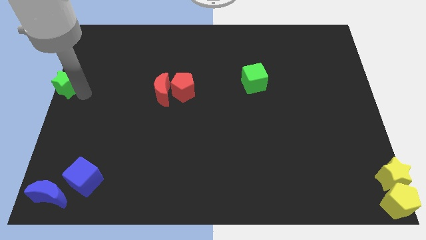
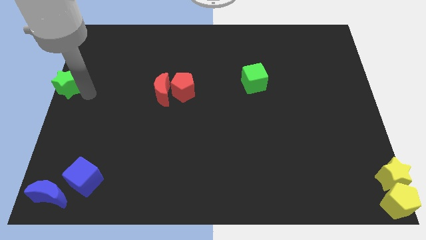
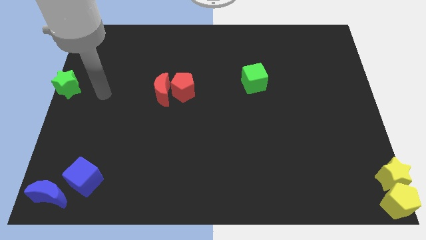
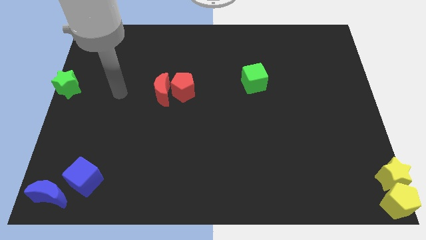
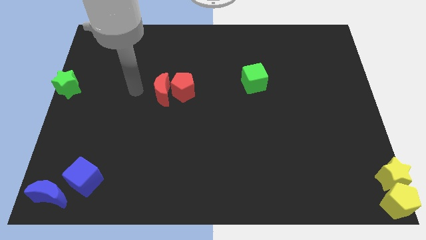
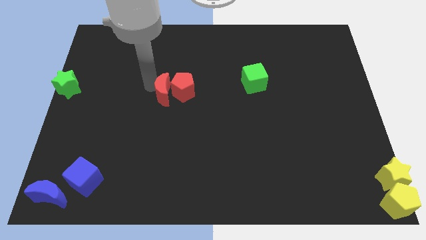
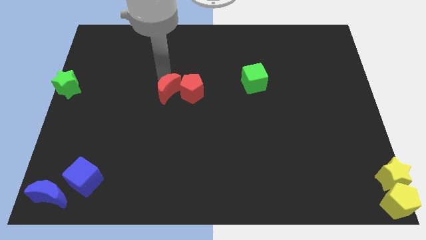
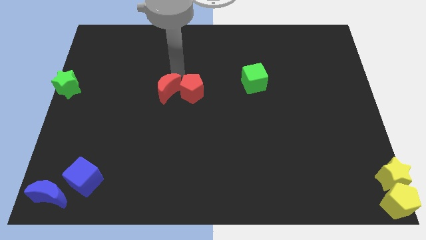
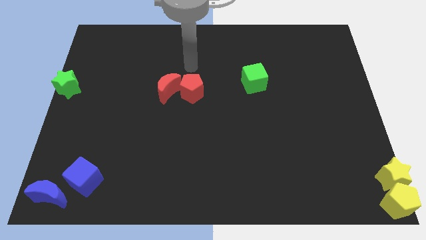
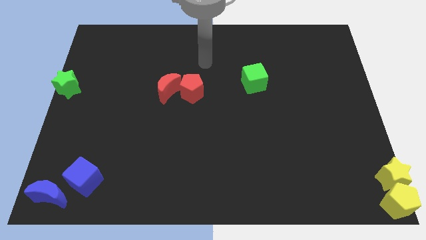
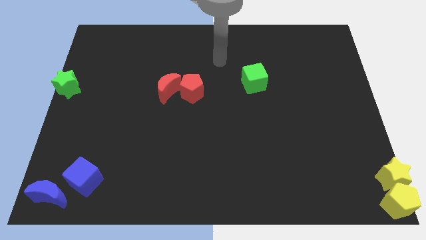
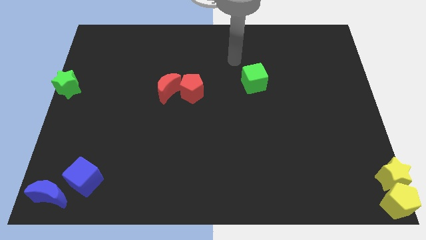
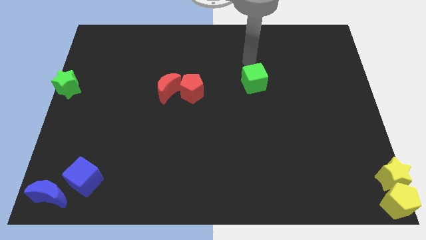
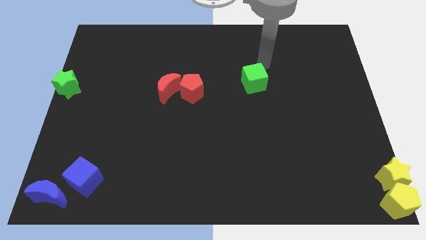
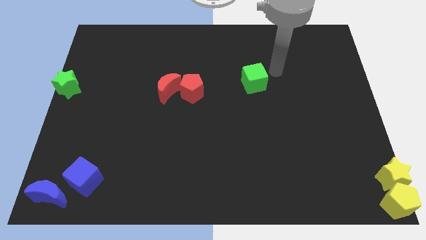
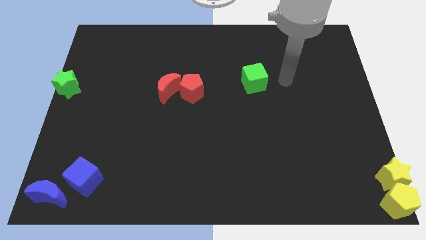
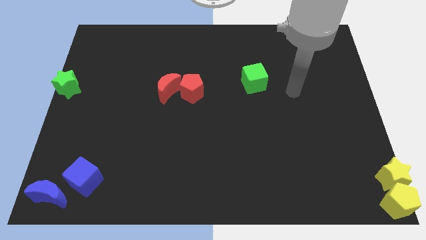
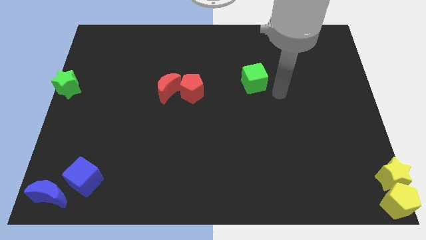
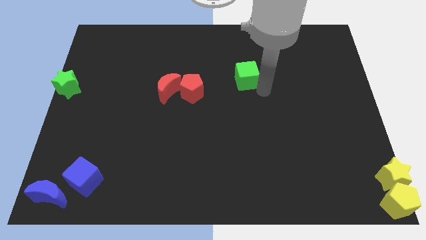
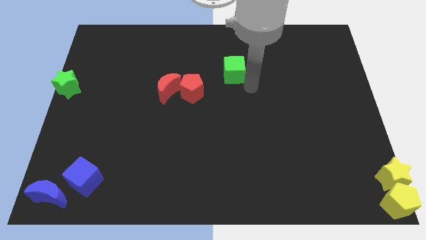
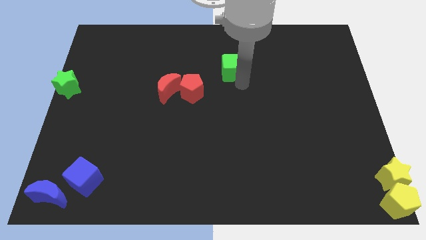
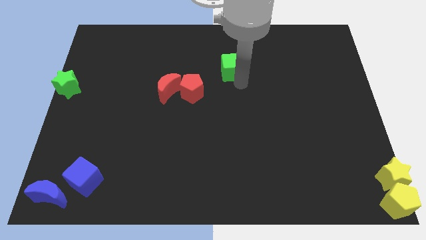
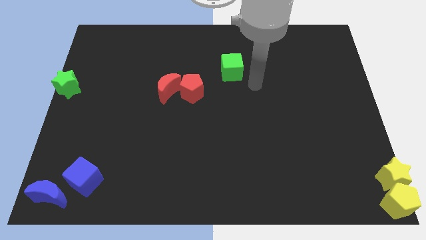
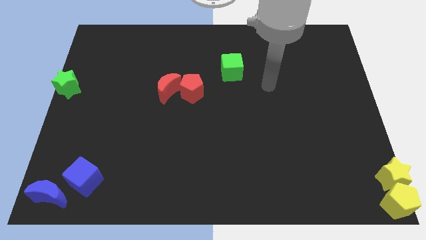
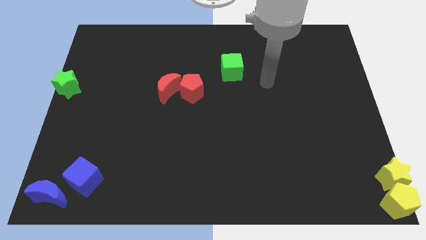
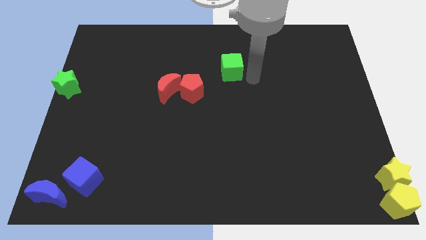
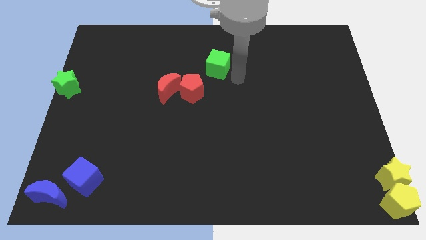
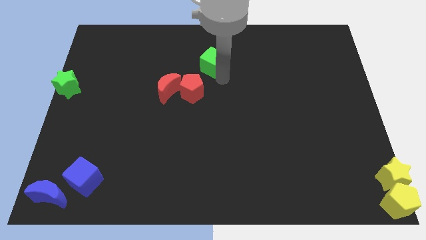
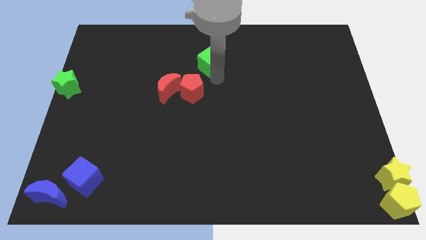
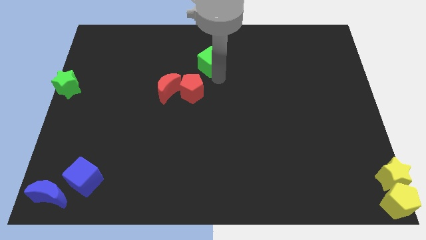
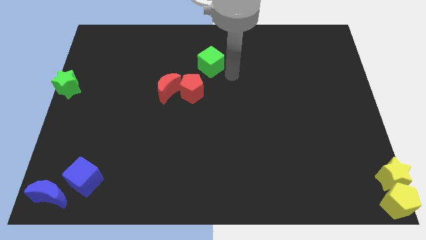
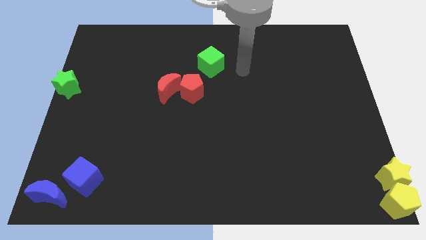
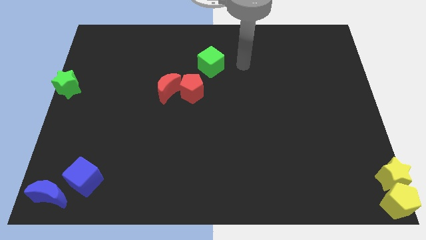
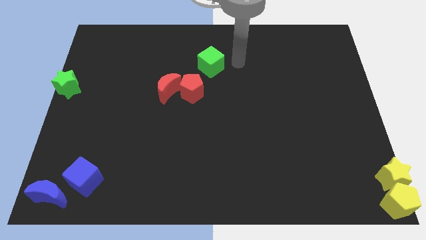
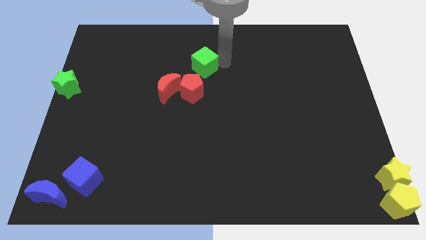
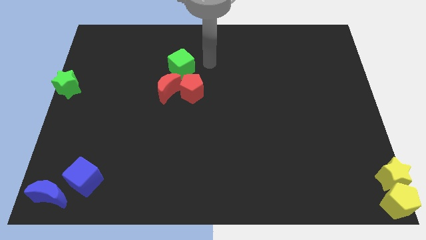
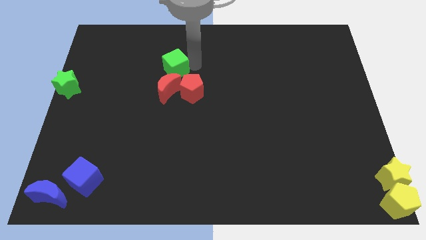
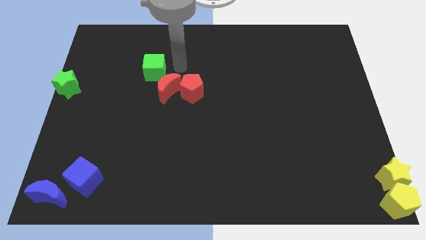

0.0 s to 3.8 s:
place green cube on top of red crescent

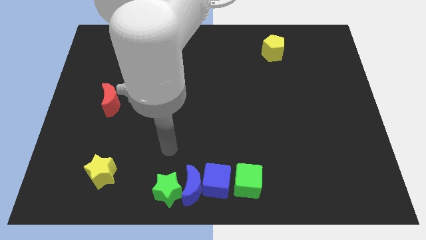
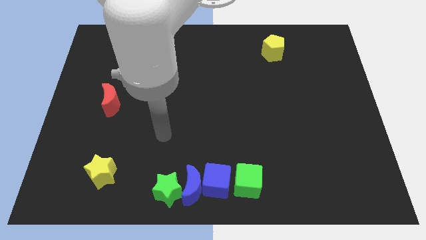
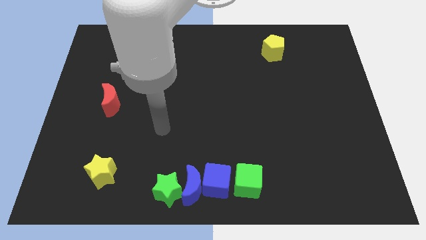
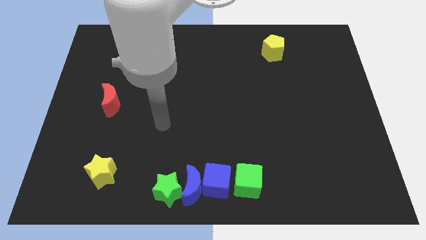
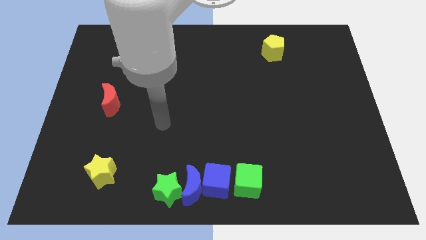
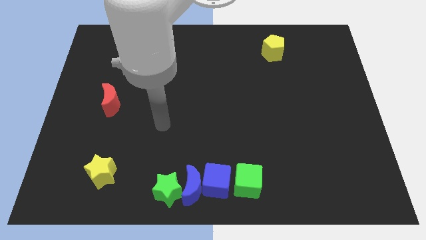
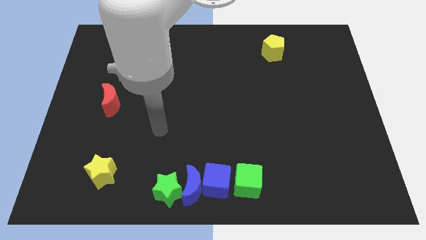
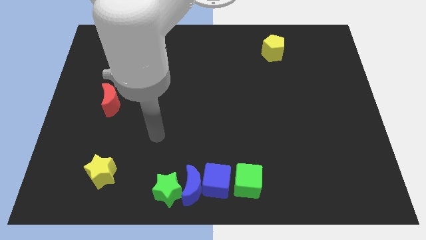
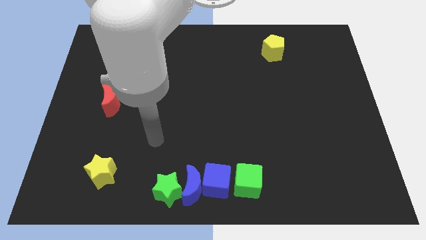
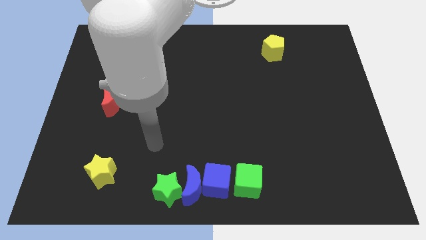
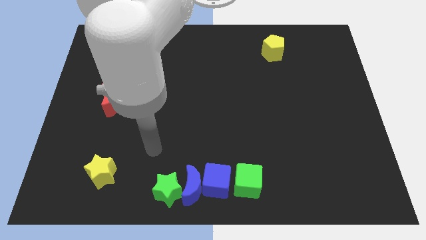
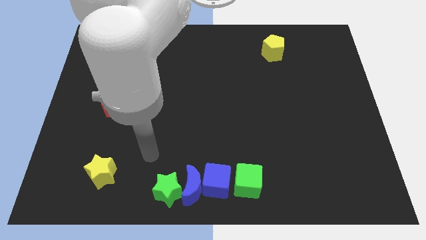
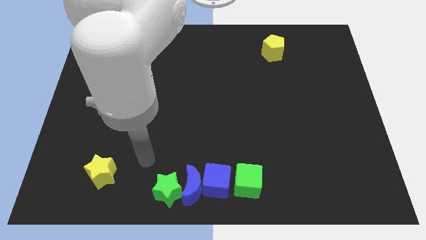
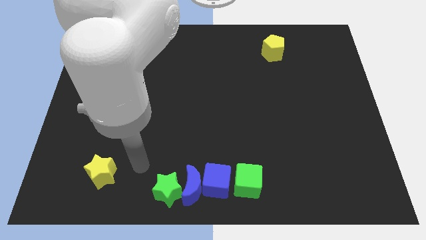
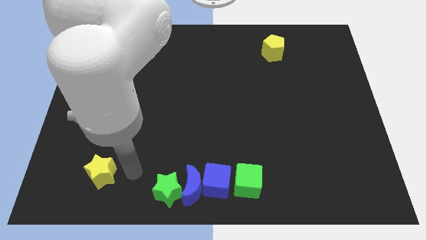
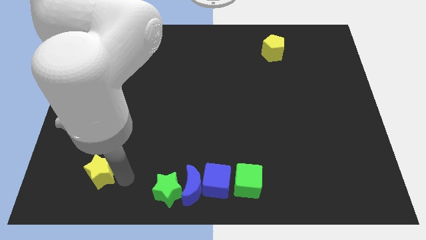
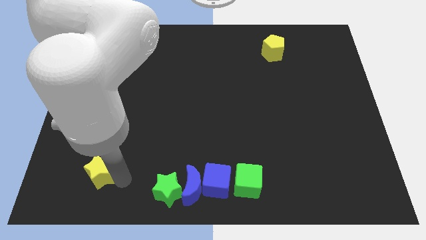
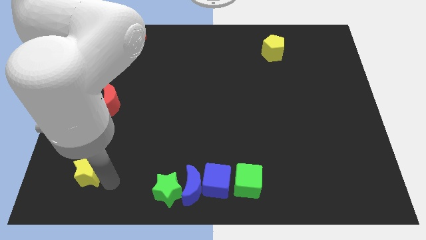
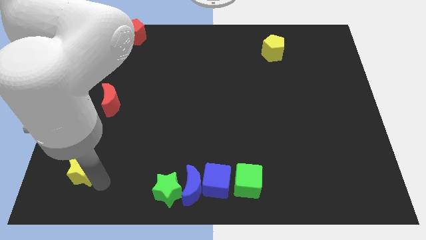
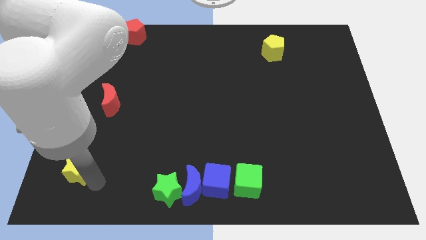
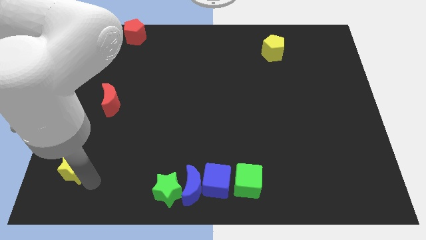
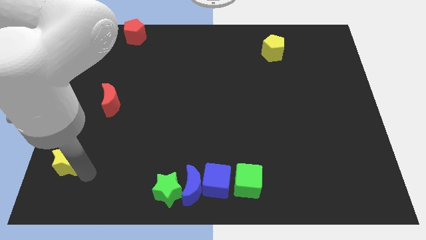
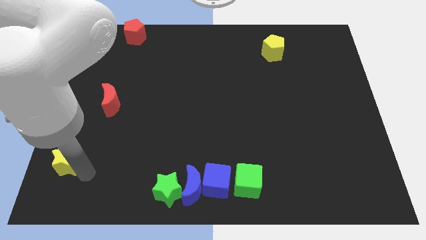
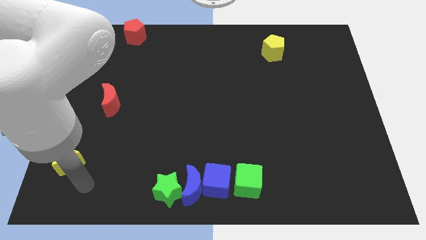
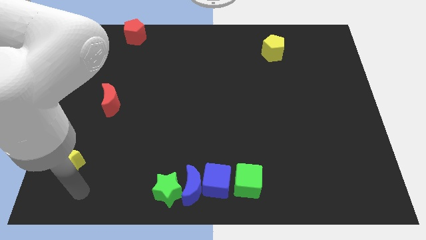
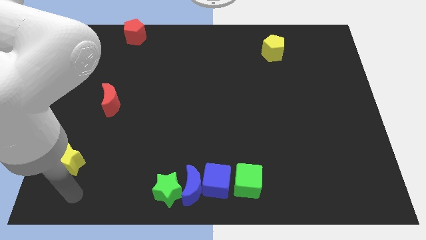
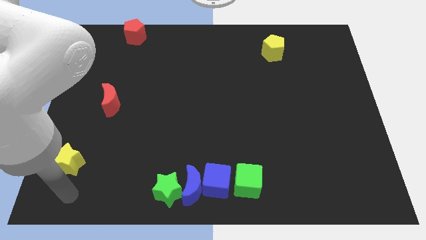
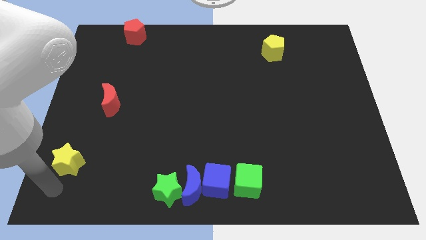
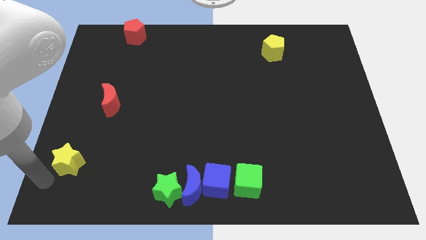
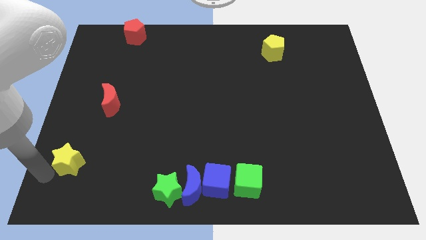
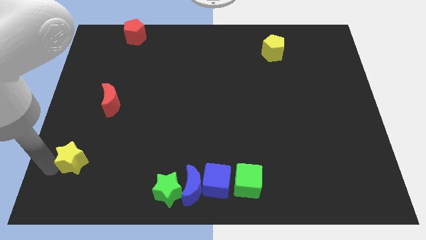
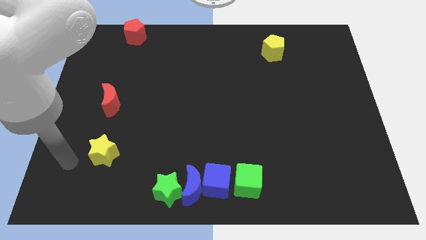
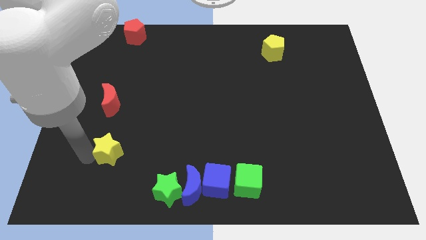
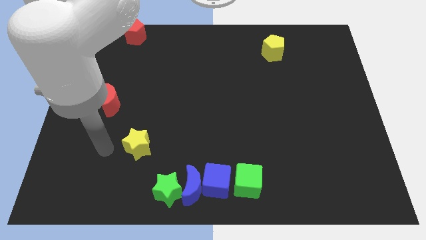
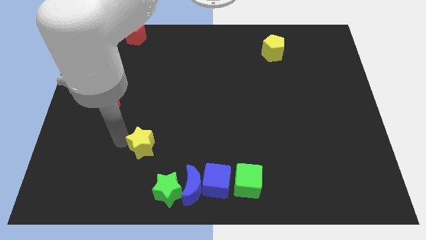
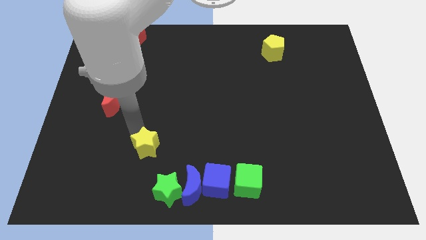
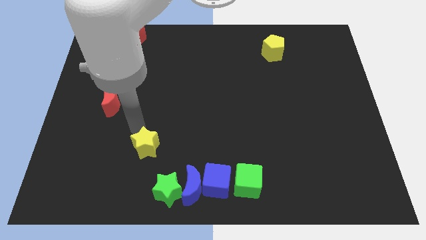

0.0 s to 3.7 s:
push the yellow star diagonally bottom right to the red moon

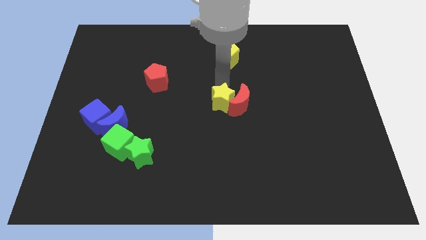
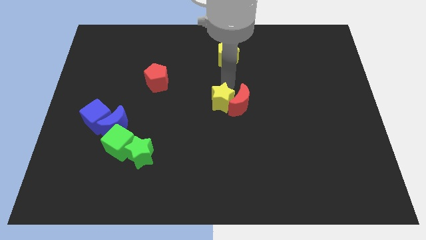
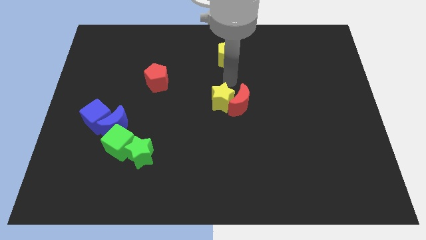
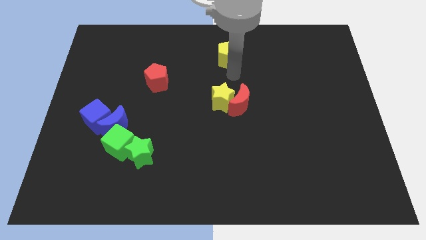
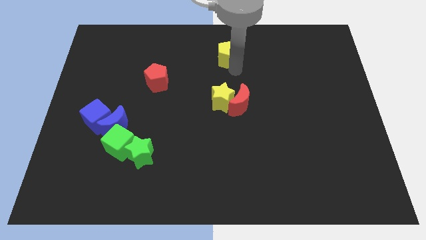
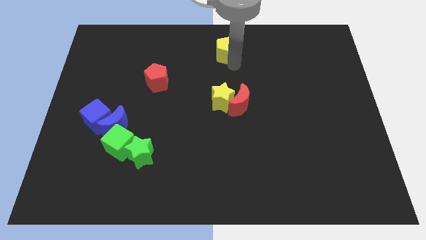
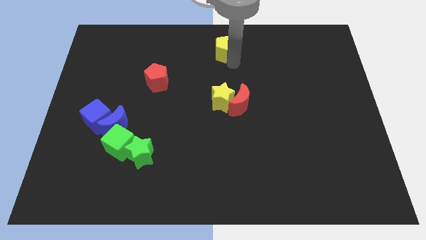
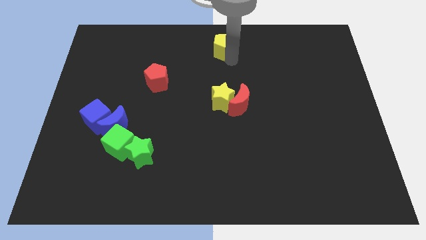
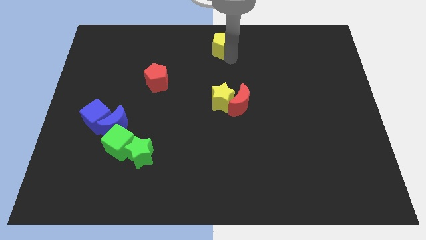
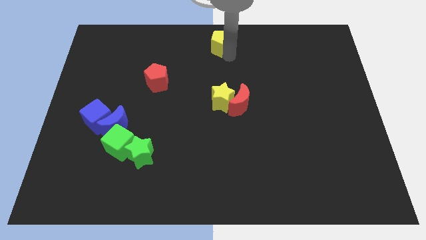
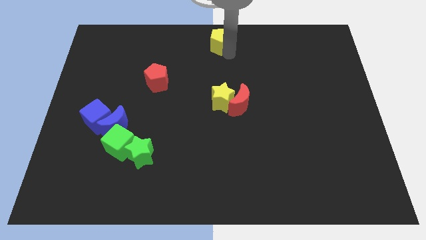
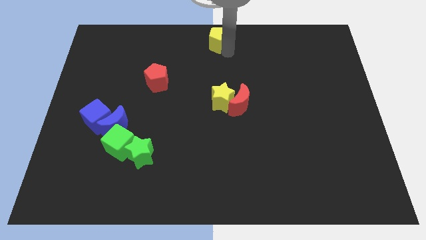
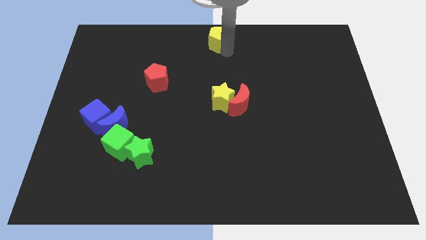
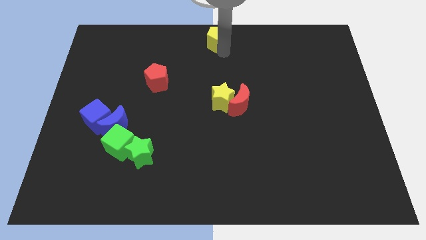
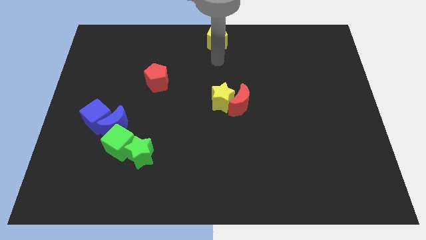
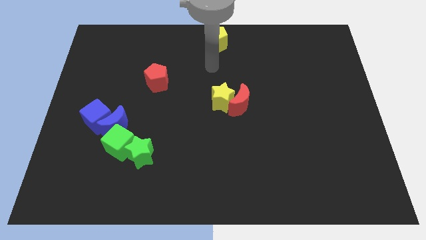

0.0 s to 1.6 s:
push the yellow pentagon to the top center
